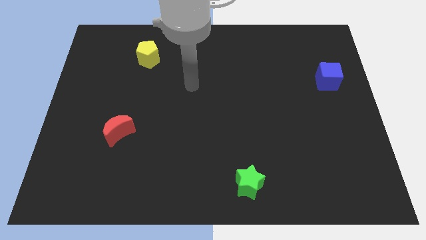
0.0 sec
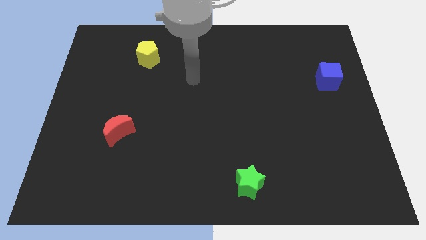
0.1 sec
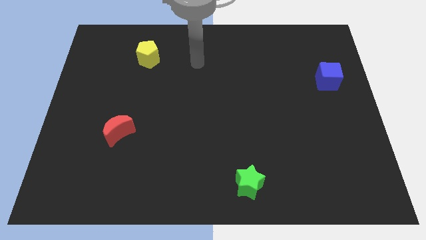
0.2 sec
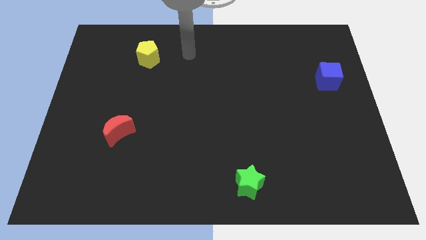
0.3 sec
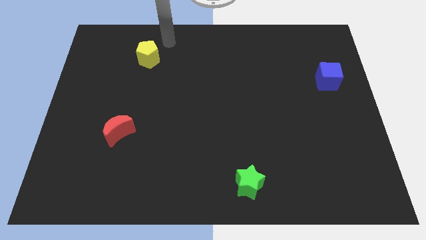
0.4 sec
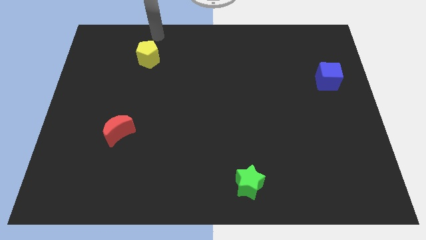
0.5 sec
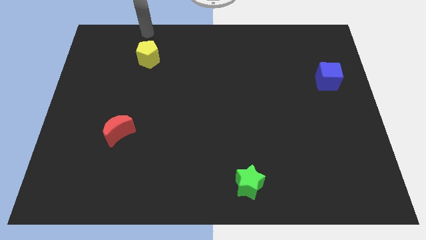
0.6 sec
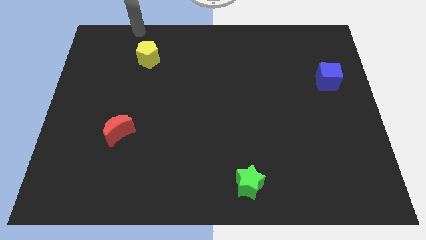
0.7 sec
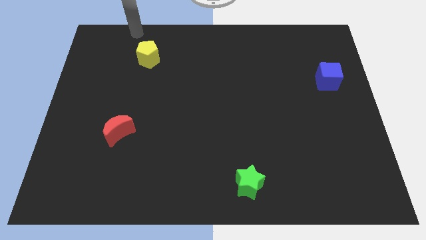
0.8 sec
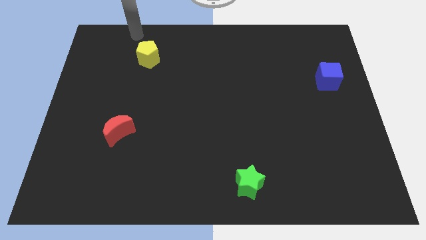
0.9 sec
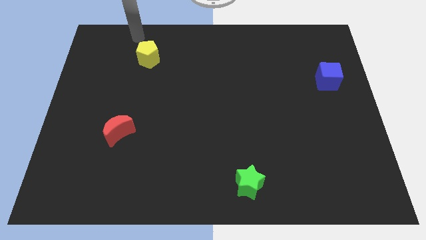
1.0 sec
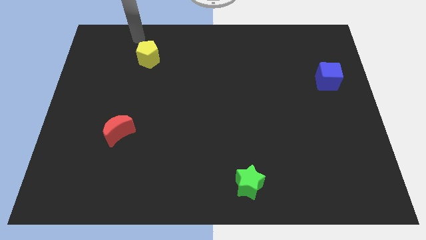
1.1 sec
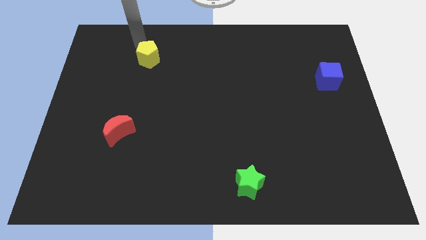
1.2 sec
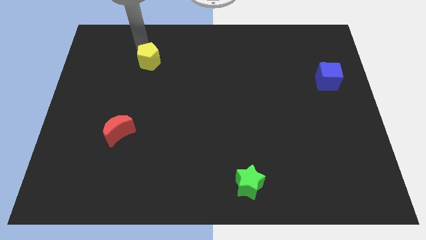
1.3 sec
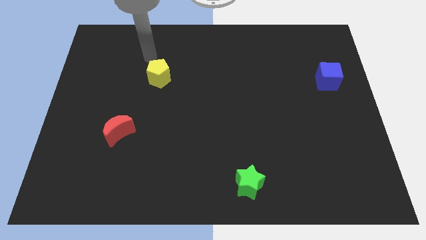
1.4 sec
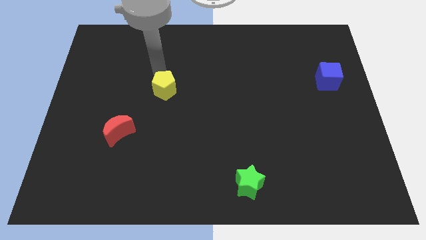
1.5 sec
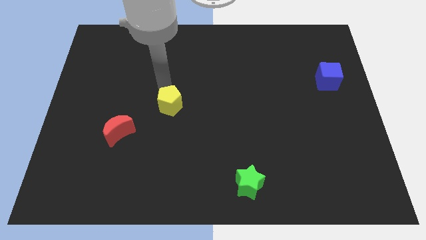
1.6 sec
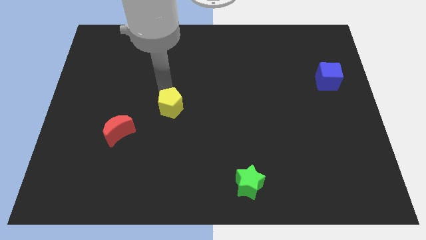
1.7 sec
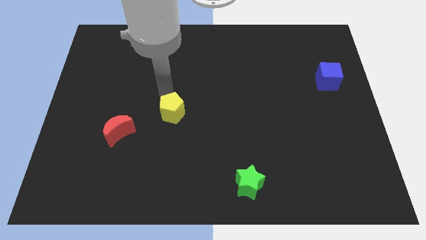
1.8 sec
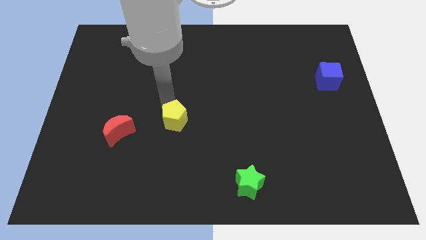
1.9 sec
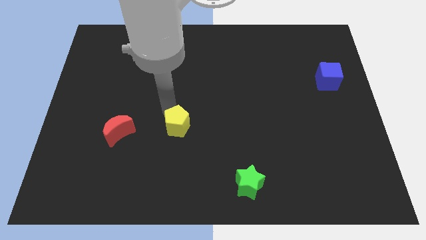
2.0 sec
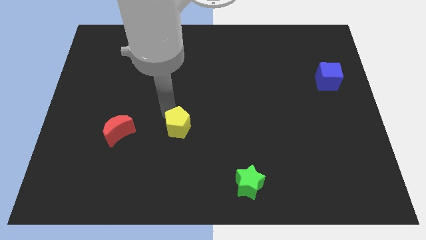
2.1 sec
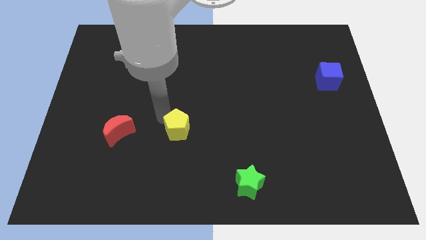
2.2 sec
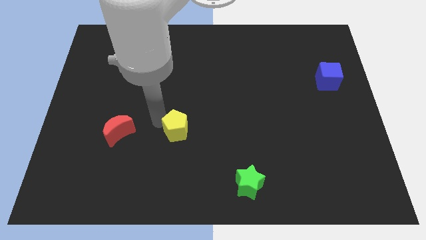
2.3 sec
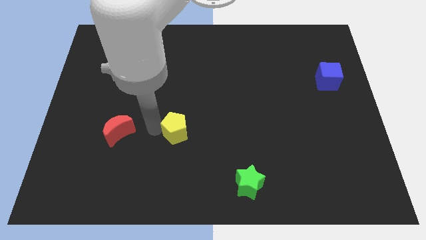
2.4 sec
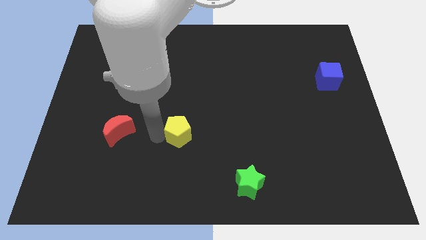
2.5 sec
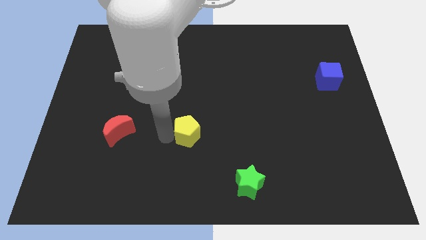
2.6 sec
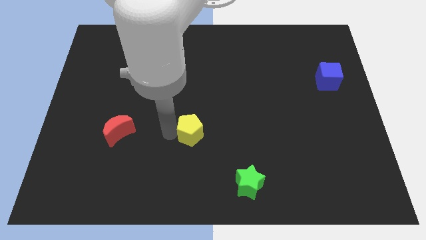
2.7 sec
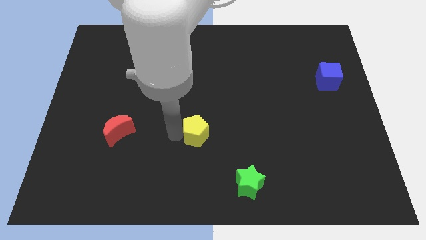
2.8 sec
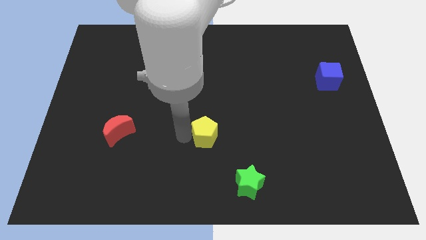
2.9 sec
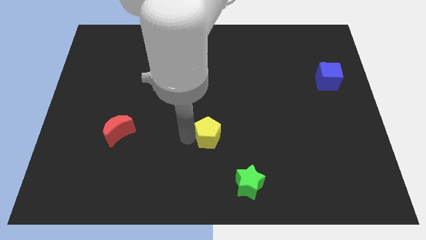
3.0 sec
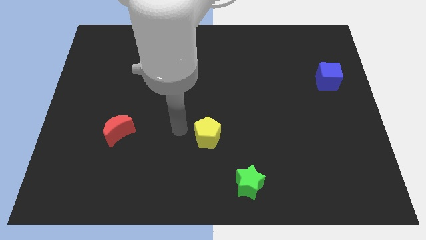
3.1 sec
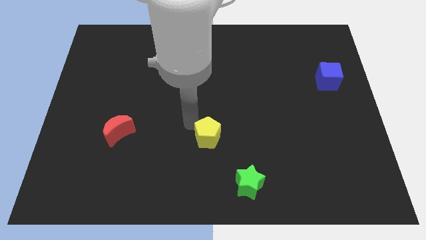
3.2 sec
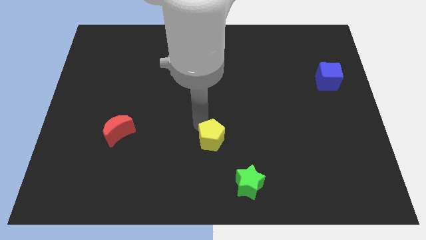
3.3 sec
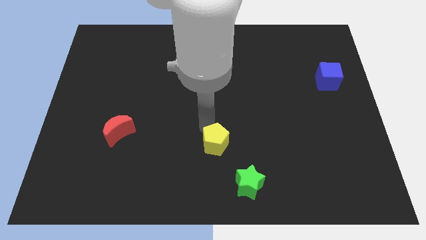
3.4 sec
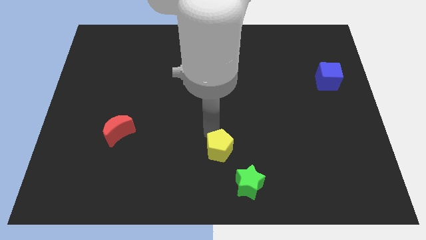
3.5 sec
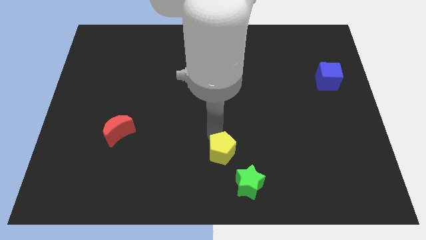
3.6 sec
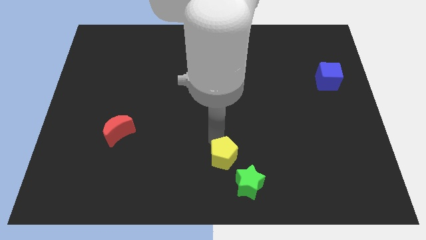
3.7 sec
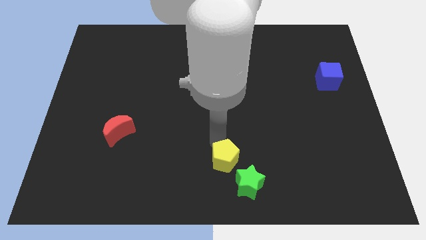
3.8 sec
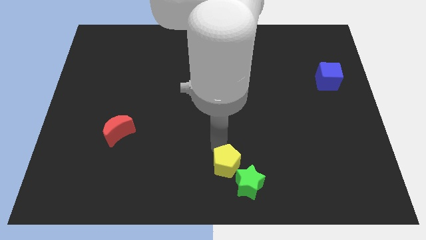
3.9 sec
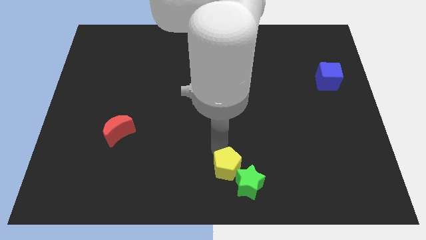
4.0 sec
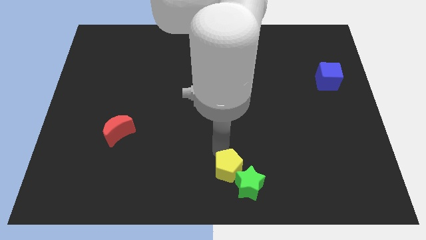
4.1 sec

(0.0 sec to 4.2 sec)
move the yellow block close to the green star

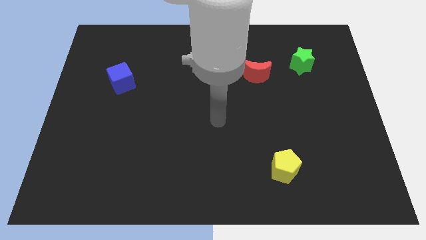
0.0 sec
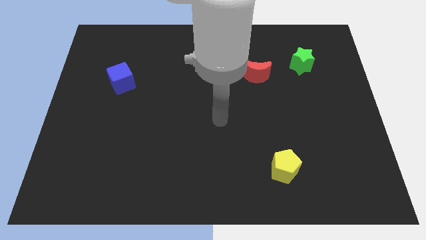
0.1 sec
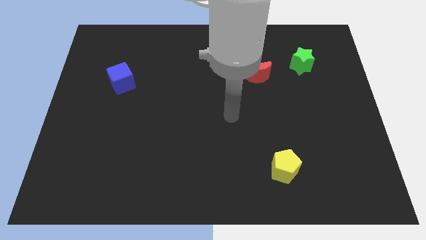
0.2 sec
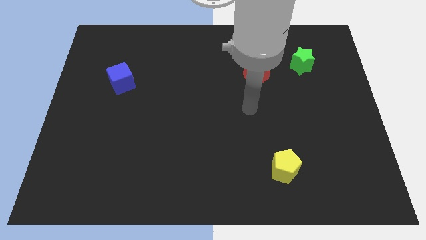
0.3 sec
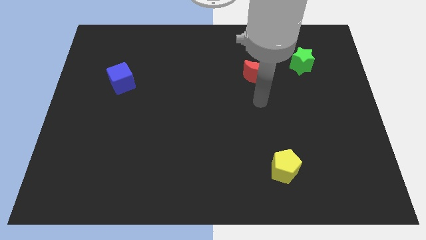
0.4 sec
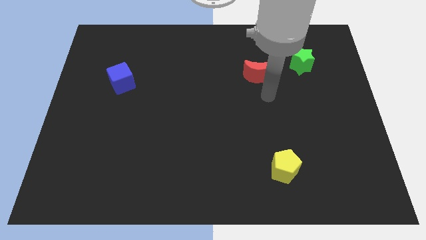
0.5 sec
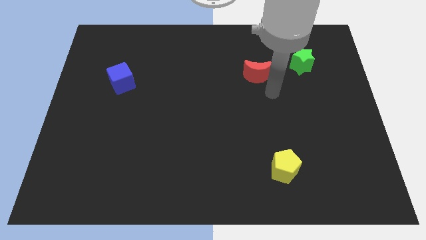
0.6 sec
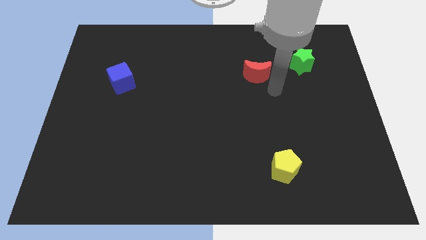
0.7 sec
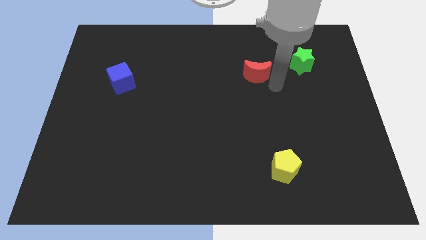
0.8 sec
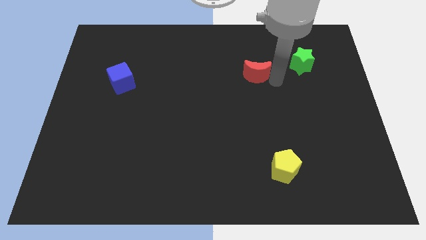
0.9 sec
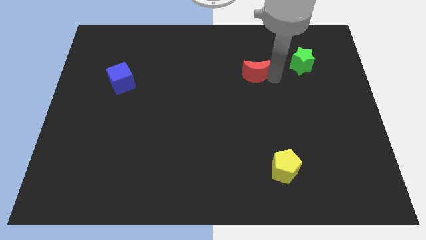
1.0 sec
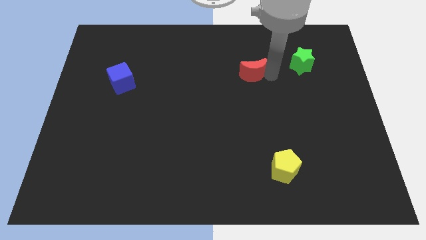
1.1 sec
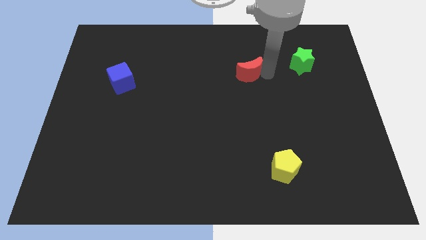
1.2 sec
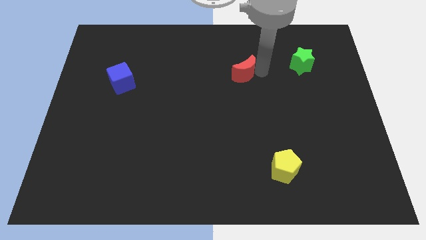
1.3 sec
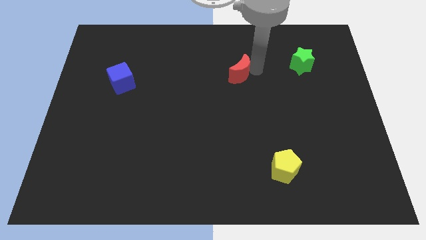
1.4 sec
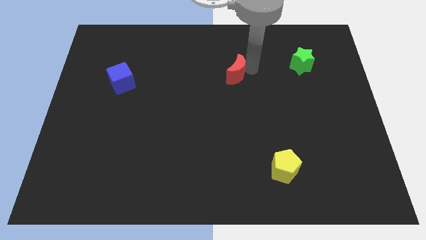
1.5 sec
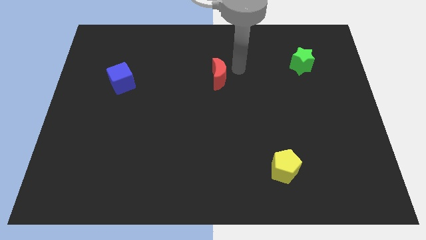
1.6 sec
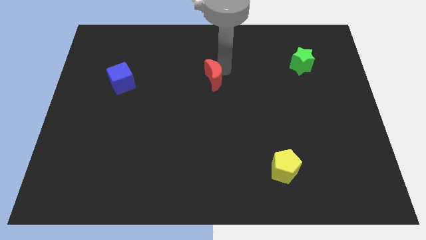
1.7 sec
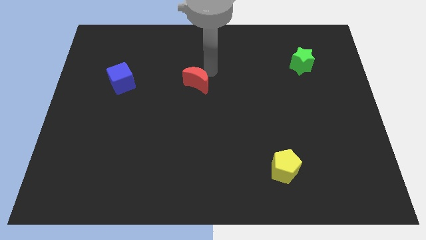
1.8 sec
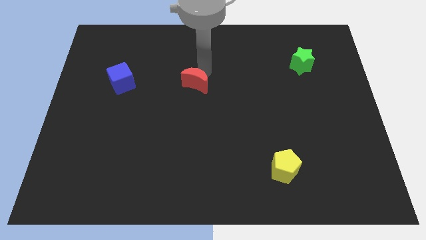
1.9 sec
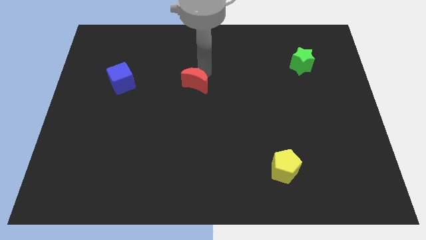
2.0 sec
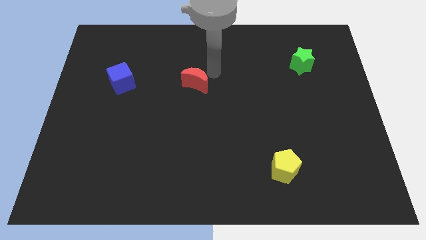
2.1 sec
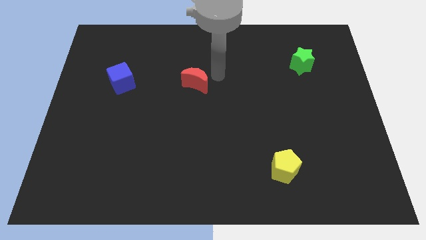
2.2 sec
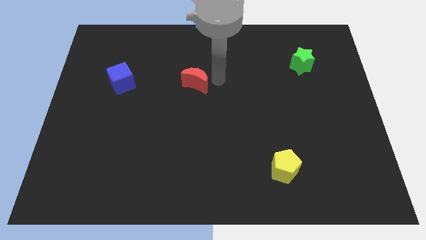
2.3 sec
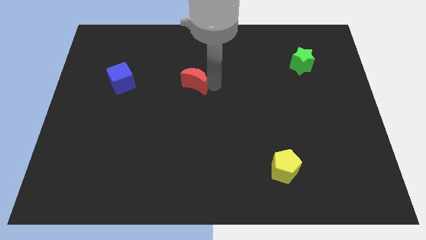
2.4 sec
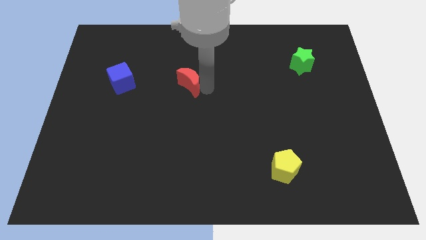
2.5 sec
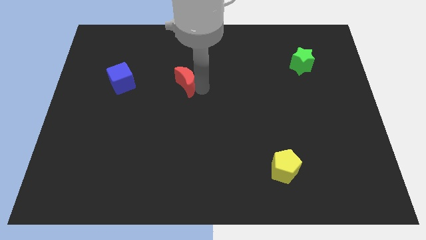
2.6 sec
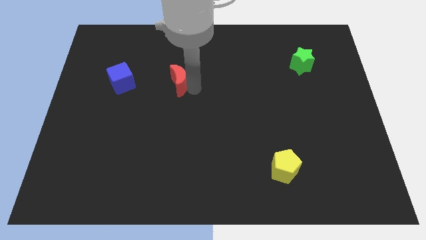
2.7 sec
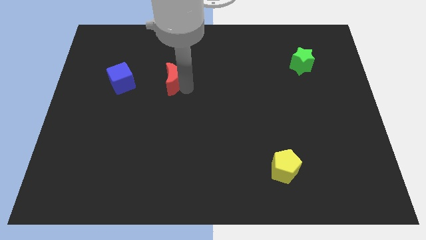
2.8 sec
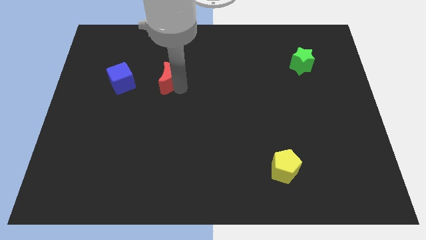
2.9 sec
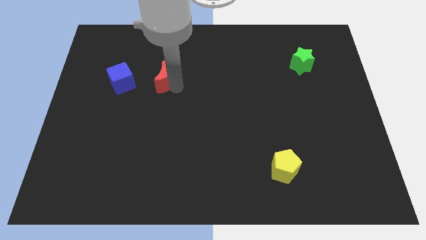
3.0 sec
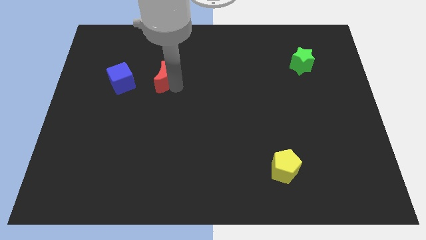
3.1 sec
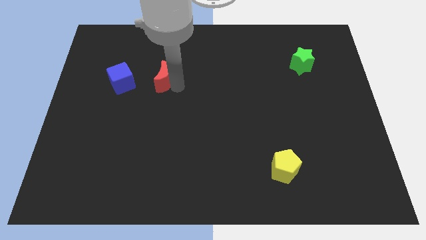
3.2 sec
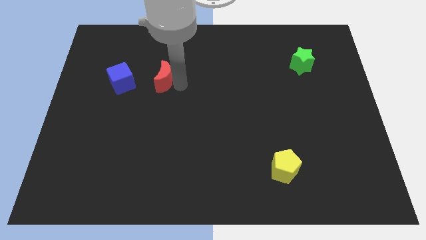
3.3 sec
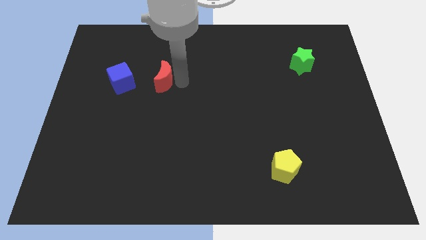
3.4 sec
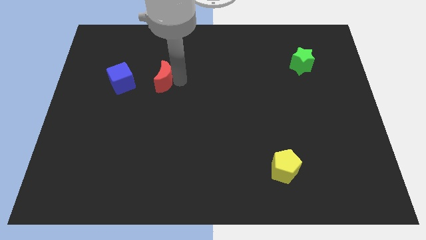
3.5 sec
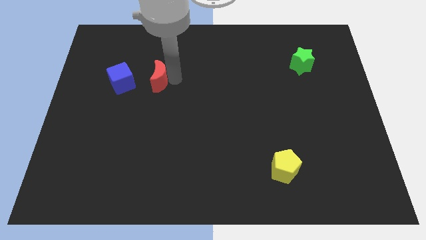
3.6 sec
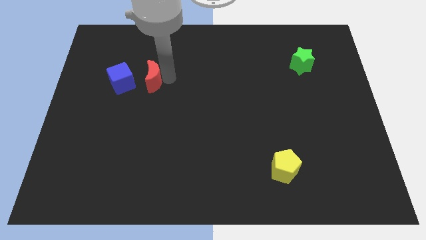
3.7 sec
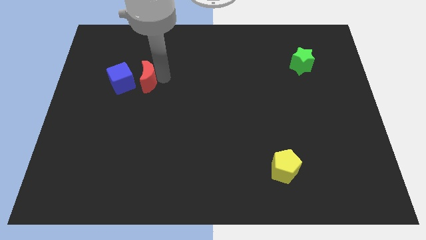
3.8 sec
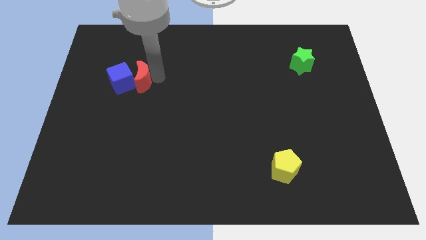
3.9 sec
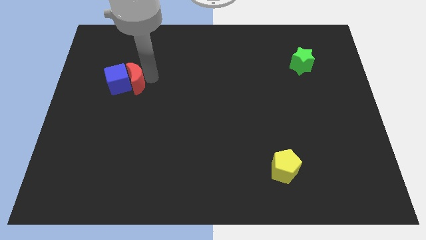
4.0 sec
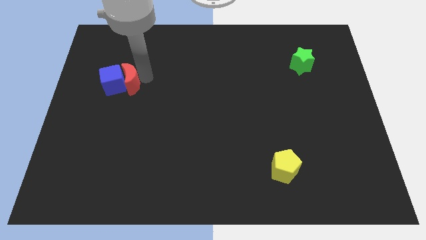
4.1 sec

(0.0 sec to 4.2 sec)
slide the moon towards the cube

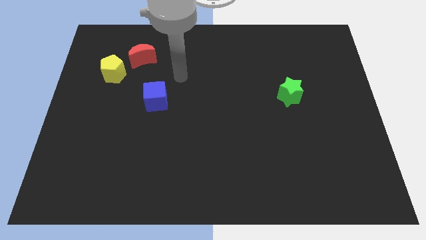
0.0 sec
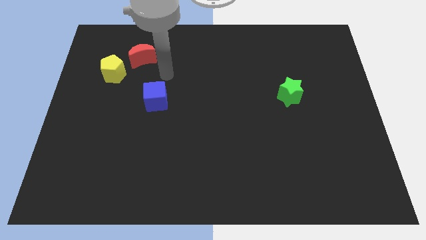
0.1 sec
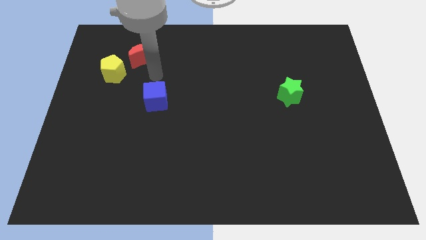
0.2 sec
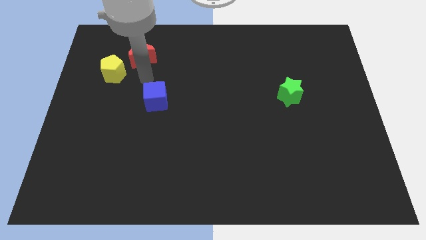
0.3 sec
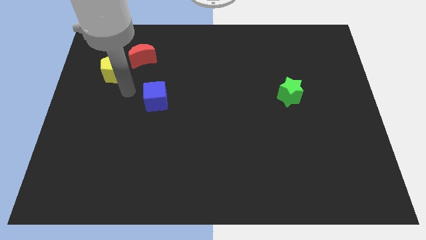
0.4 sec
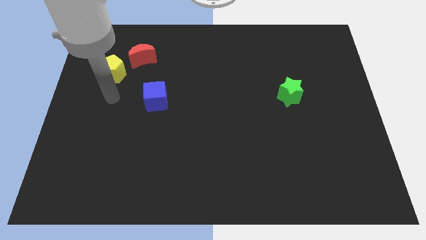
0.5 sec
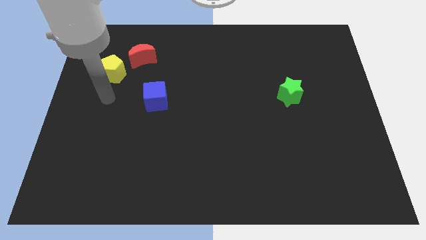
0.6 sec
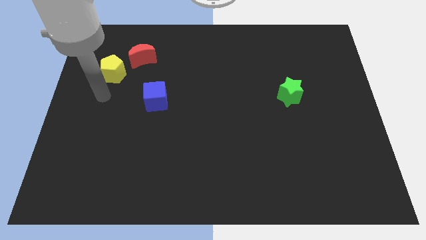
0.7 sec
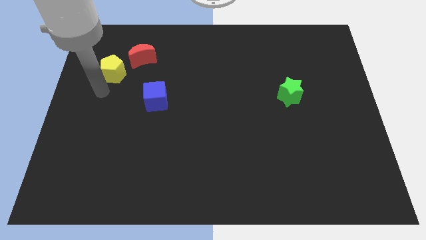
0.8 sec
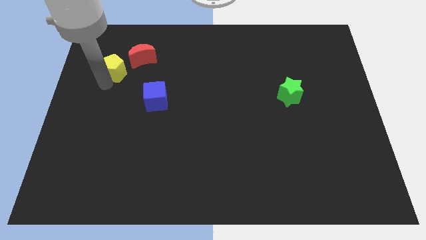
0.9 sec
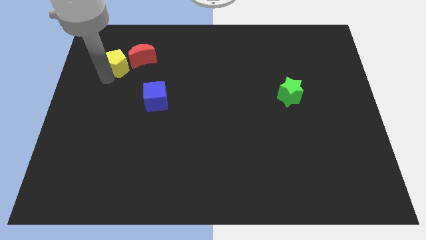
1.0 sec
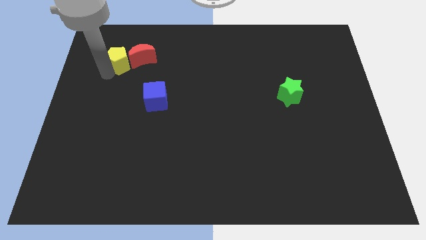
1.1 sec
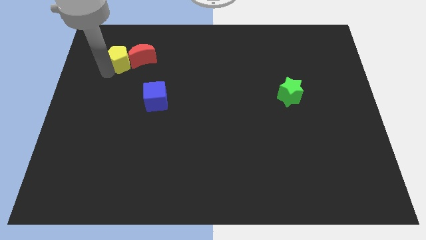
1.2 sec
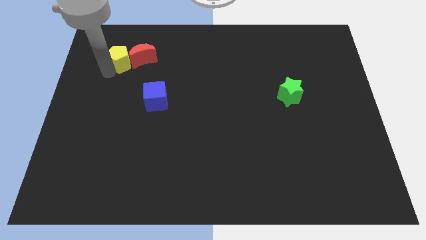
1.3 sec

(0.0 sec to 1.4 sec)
push the yellow pentagon to the moon
